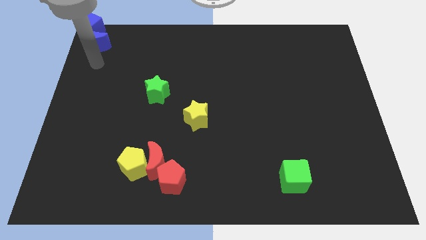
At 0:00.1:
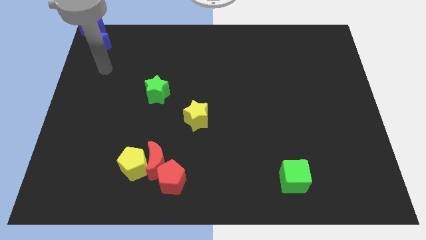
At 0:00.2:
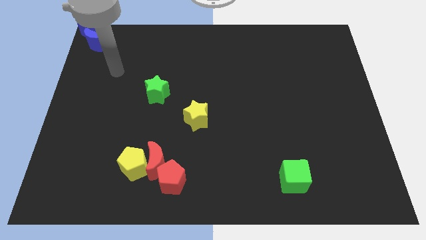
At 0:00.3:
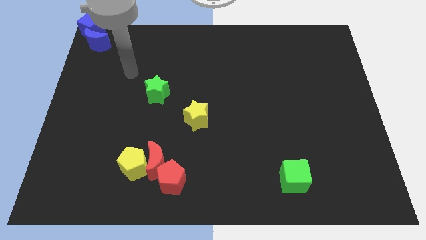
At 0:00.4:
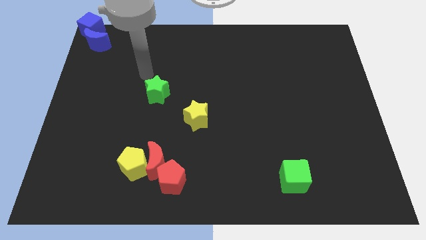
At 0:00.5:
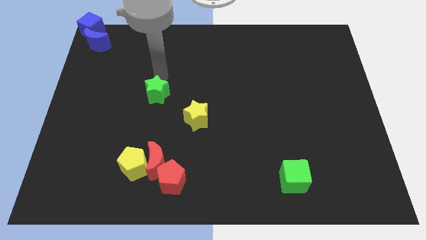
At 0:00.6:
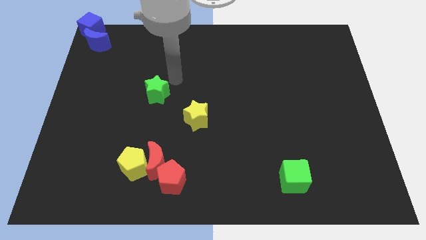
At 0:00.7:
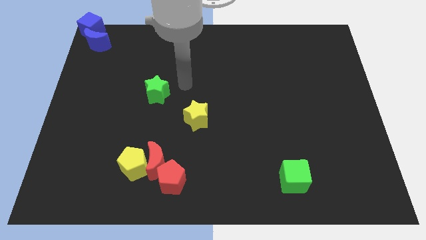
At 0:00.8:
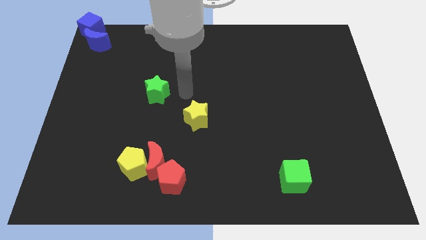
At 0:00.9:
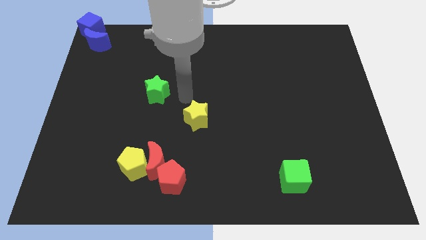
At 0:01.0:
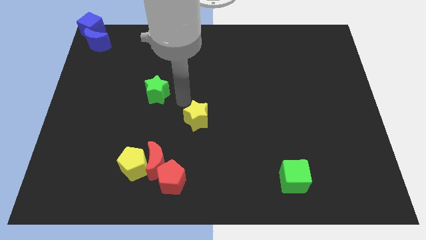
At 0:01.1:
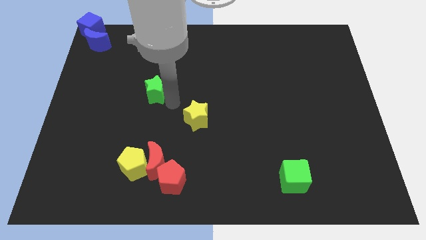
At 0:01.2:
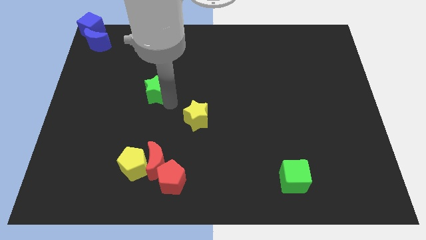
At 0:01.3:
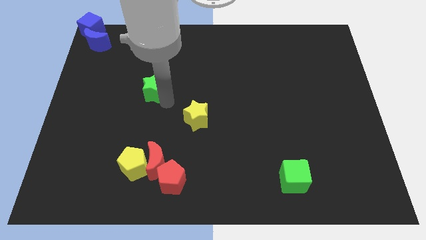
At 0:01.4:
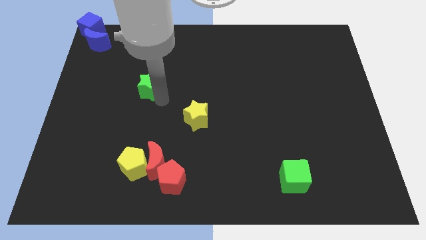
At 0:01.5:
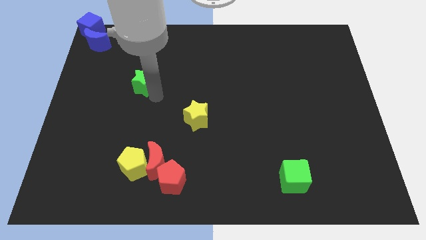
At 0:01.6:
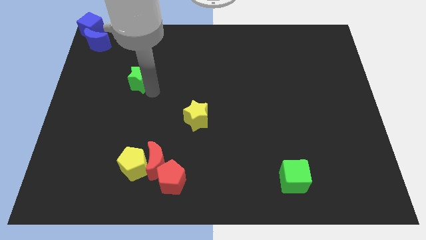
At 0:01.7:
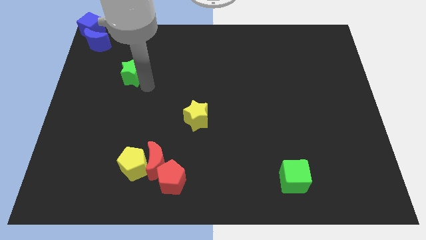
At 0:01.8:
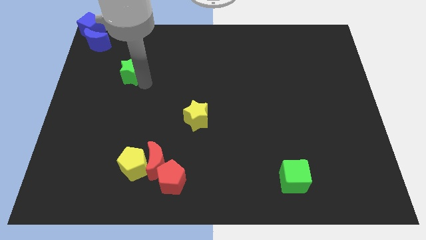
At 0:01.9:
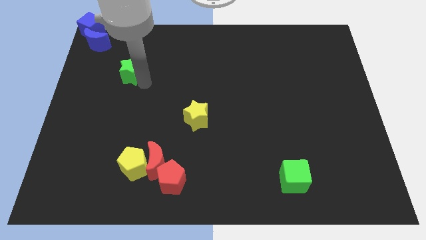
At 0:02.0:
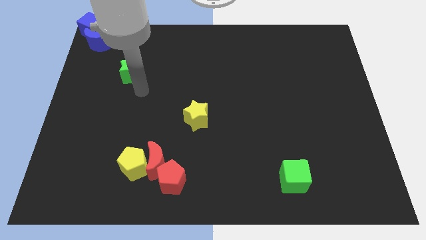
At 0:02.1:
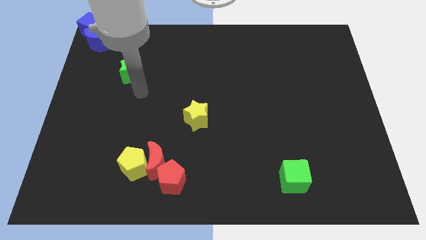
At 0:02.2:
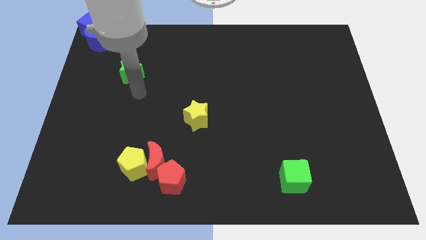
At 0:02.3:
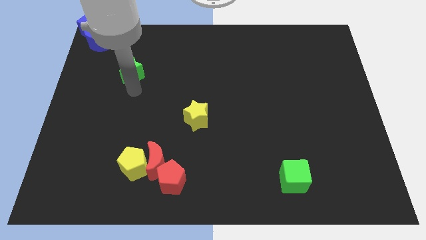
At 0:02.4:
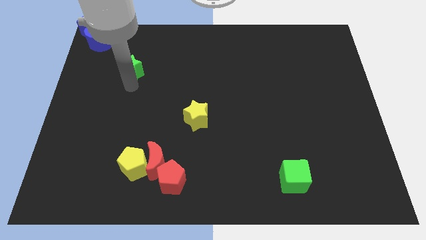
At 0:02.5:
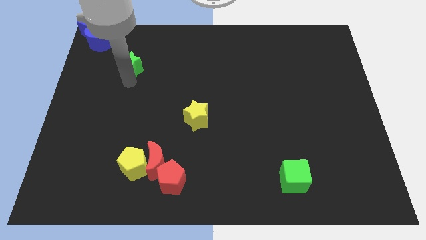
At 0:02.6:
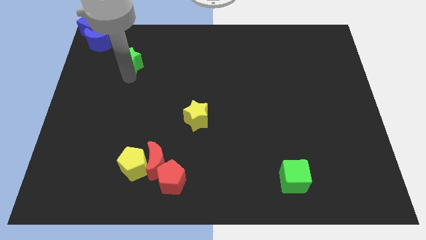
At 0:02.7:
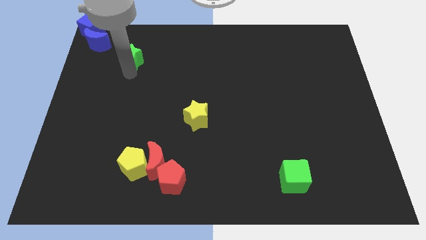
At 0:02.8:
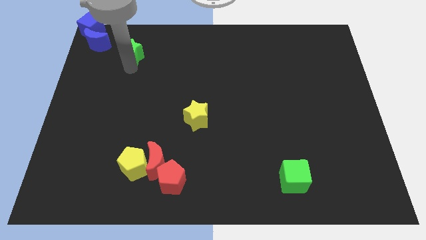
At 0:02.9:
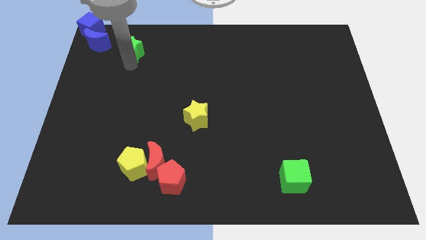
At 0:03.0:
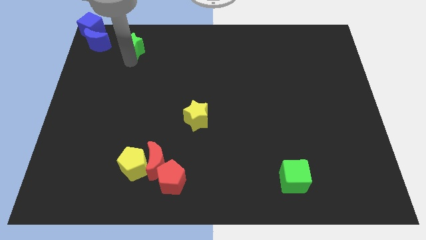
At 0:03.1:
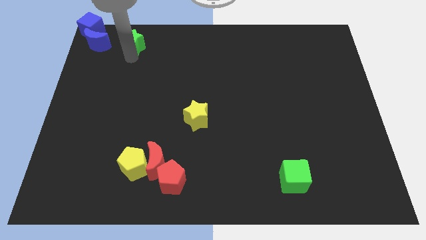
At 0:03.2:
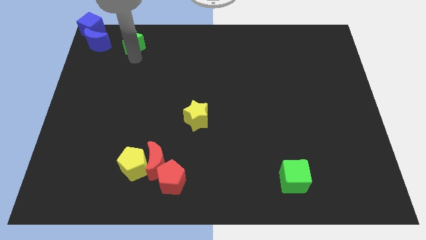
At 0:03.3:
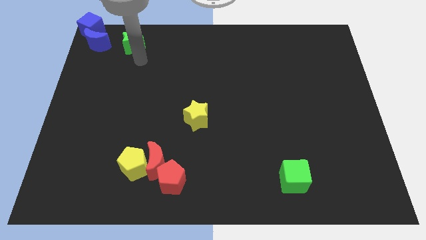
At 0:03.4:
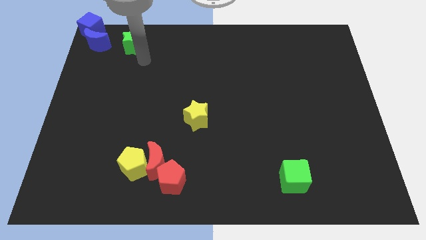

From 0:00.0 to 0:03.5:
place the green star parallel right to the blue moon

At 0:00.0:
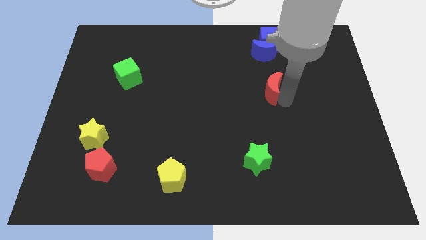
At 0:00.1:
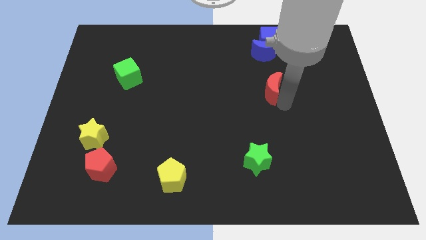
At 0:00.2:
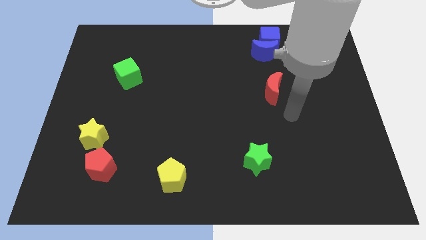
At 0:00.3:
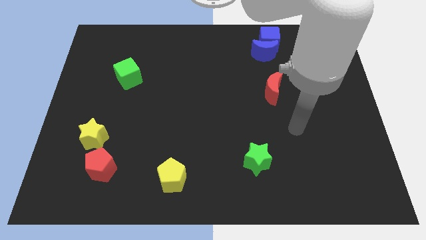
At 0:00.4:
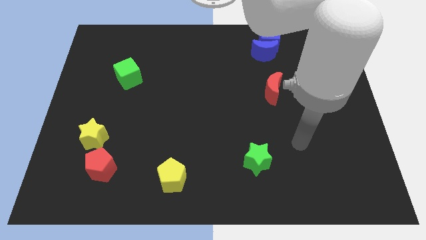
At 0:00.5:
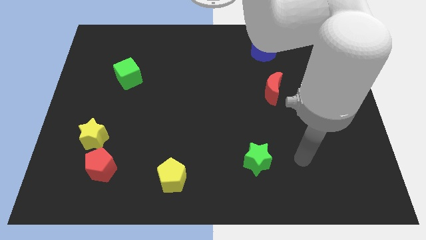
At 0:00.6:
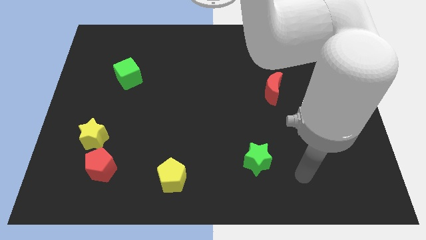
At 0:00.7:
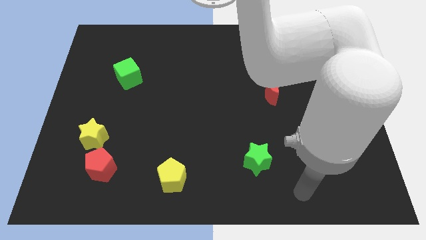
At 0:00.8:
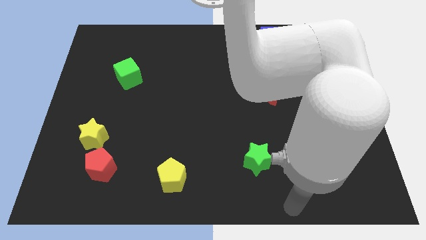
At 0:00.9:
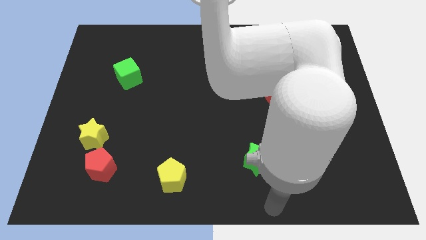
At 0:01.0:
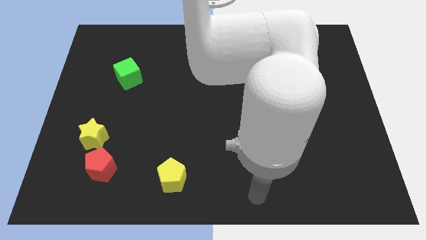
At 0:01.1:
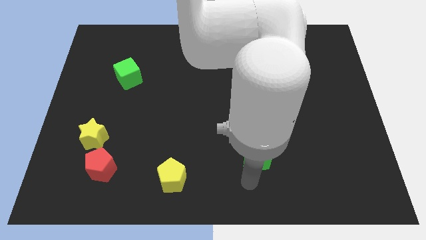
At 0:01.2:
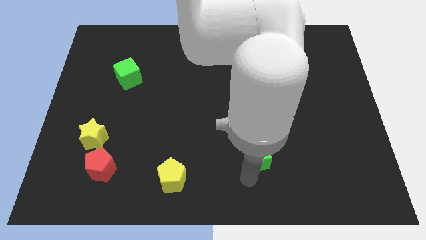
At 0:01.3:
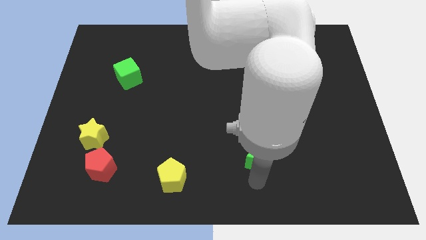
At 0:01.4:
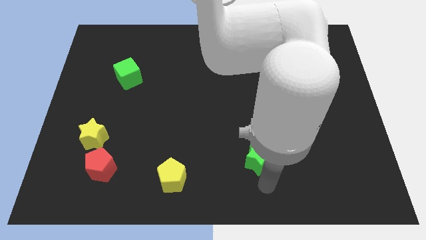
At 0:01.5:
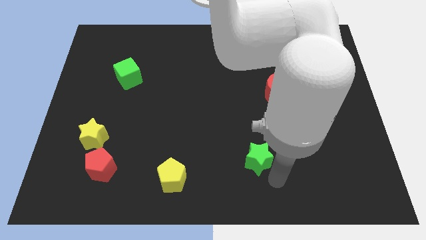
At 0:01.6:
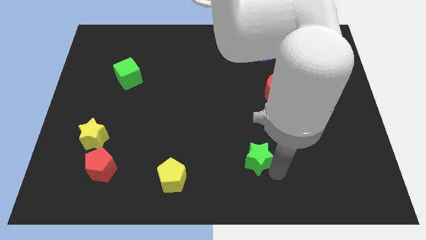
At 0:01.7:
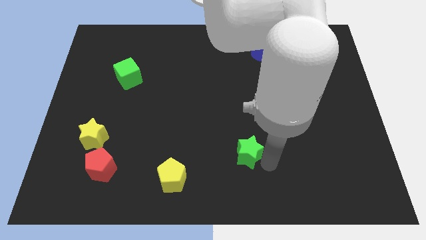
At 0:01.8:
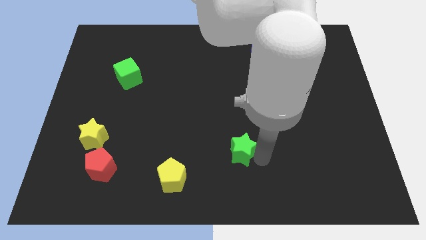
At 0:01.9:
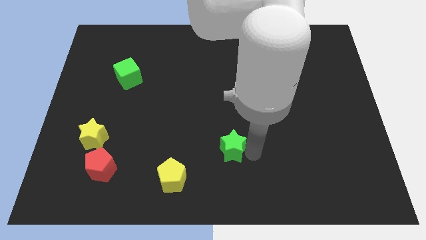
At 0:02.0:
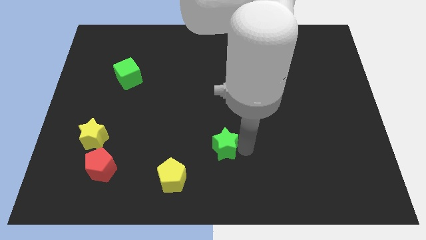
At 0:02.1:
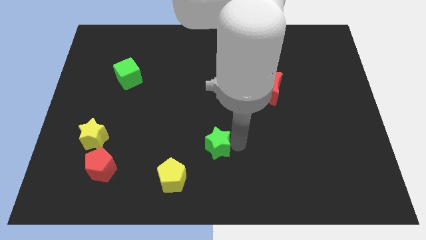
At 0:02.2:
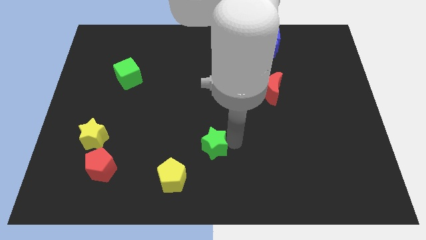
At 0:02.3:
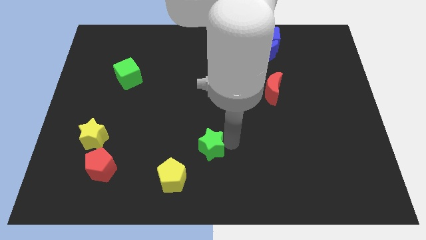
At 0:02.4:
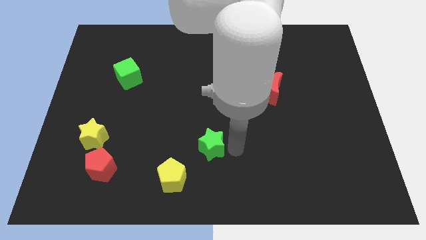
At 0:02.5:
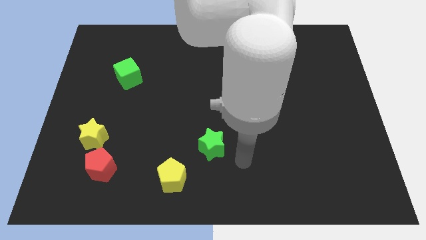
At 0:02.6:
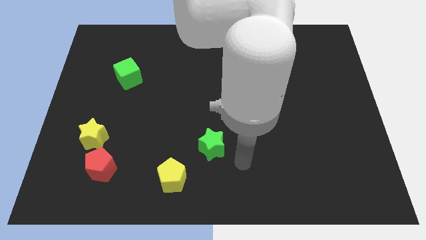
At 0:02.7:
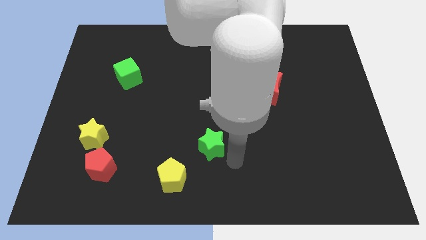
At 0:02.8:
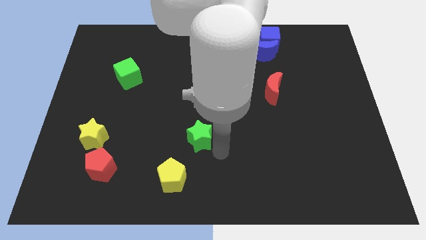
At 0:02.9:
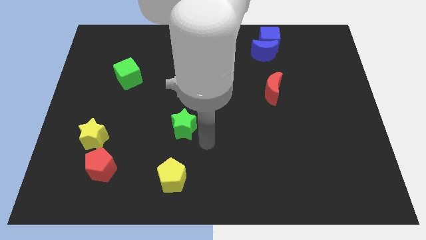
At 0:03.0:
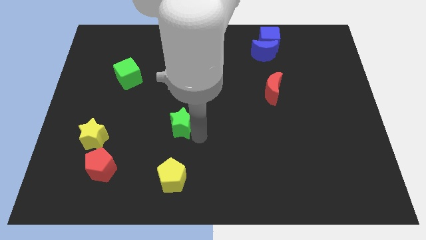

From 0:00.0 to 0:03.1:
move the green star above the yellow pentagon

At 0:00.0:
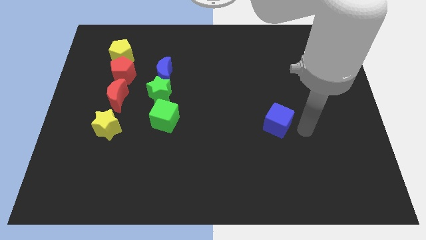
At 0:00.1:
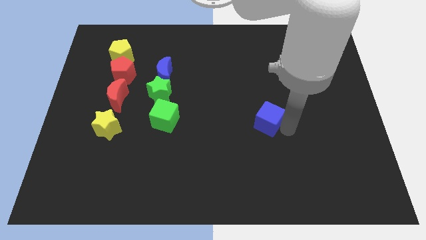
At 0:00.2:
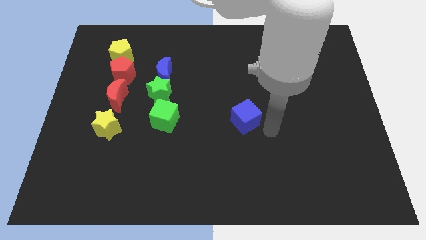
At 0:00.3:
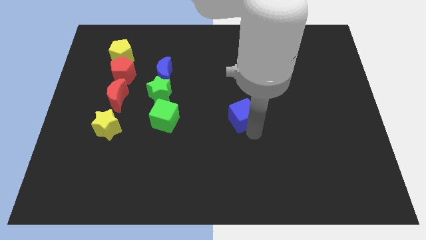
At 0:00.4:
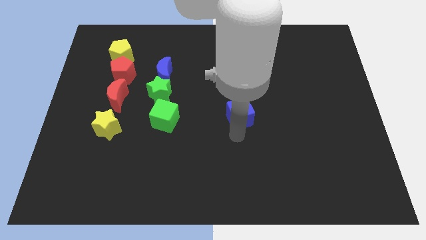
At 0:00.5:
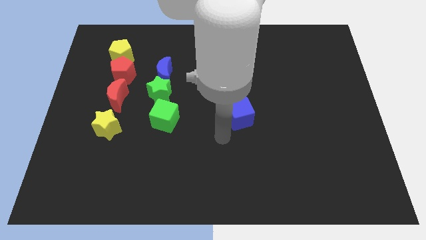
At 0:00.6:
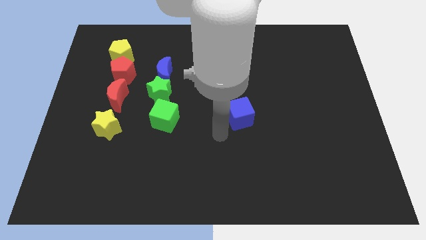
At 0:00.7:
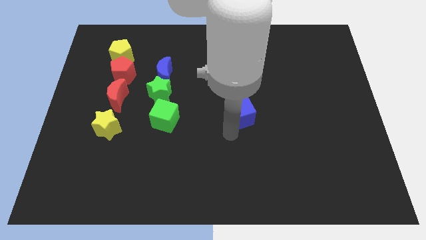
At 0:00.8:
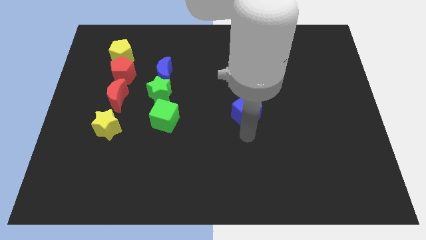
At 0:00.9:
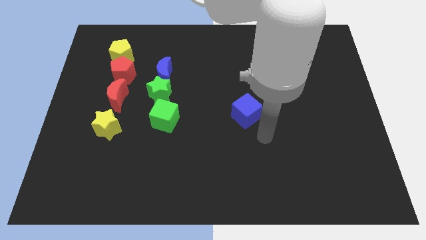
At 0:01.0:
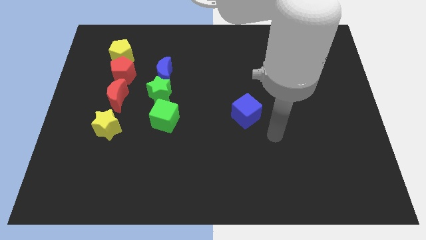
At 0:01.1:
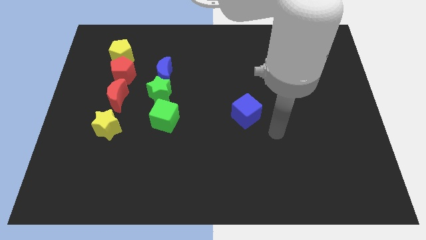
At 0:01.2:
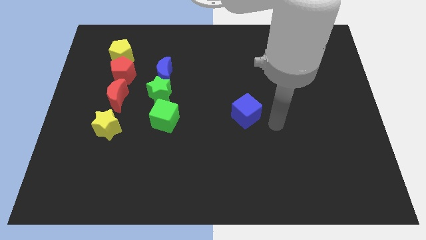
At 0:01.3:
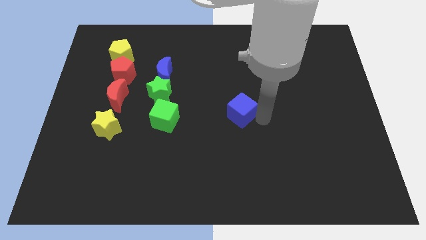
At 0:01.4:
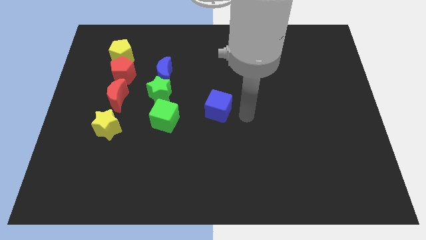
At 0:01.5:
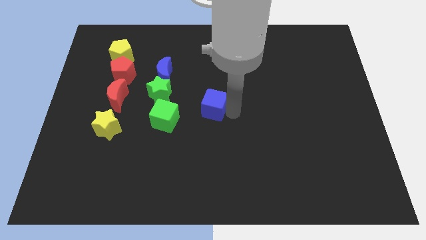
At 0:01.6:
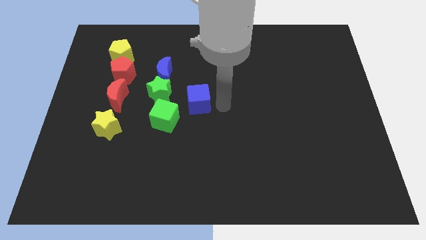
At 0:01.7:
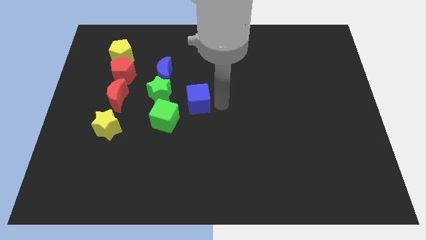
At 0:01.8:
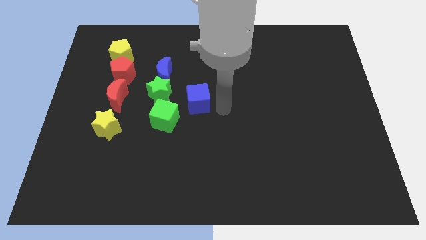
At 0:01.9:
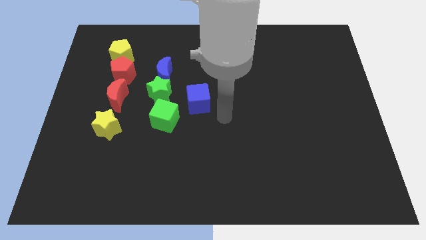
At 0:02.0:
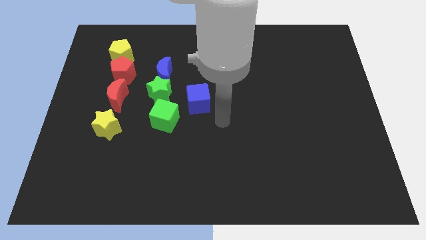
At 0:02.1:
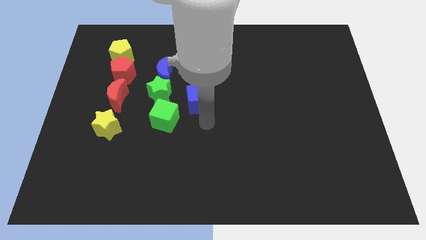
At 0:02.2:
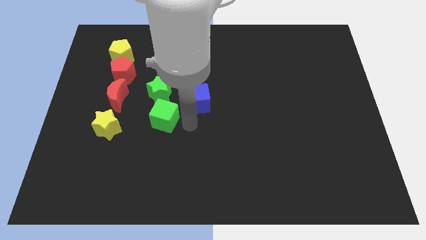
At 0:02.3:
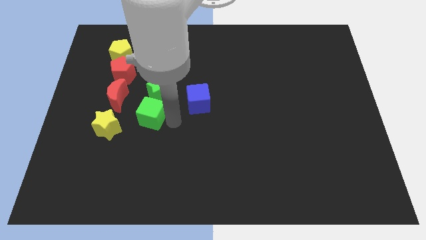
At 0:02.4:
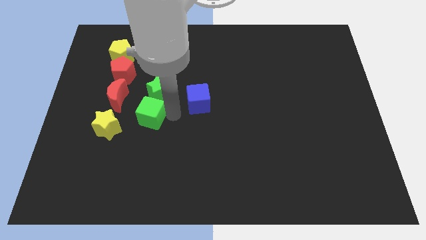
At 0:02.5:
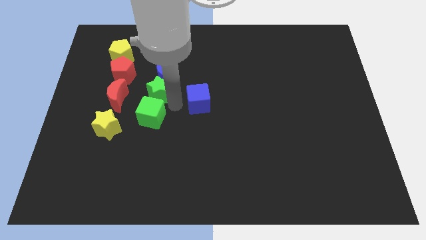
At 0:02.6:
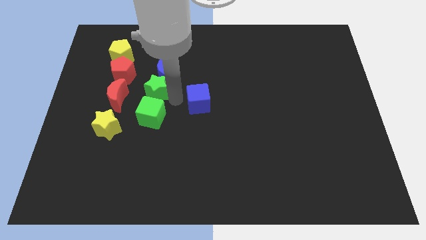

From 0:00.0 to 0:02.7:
move blue cube near group of blocks
